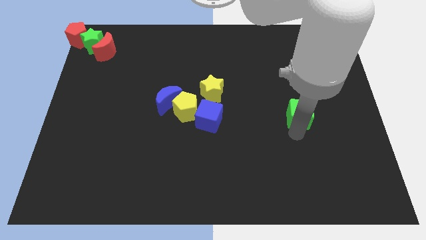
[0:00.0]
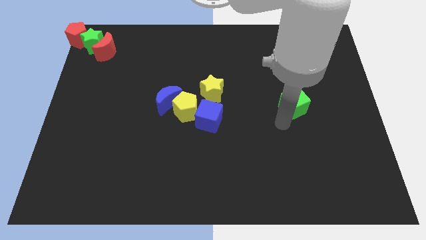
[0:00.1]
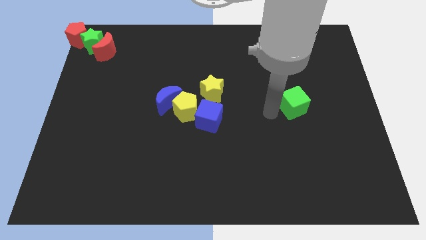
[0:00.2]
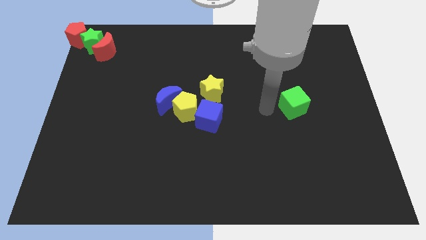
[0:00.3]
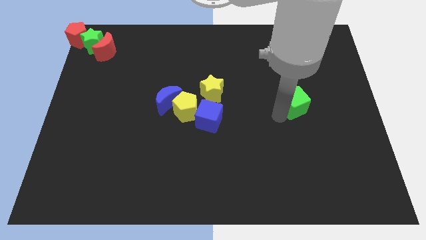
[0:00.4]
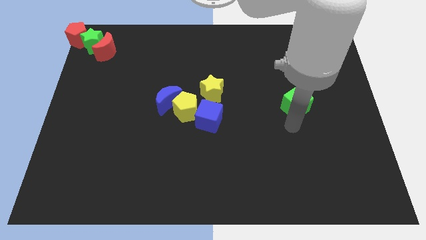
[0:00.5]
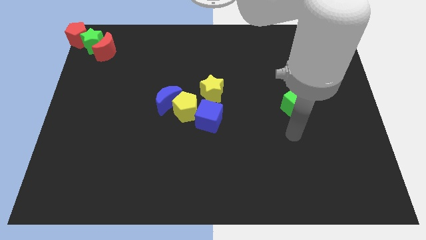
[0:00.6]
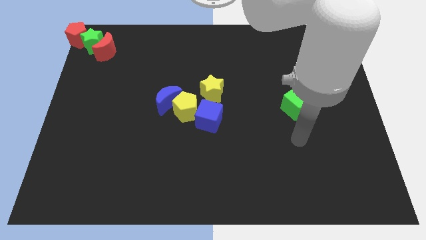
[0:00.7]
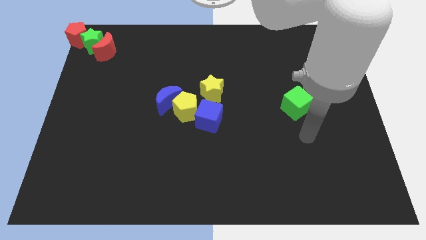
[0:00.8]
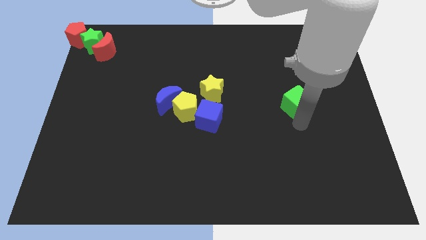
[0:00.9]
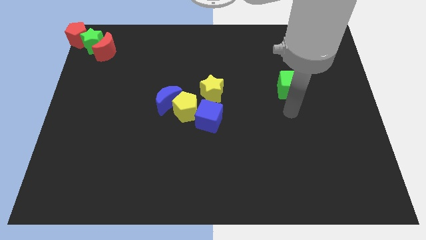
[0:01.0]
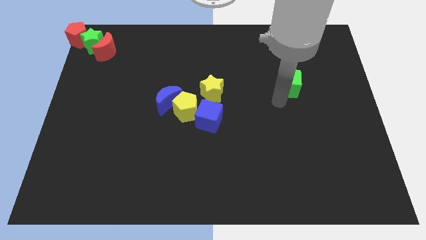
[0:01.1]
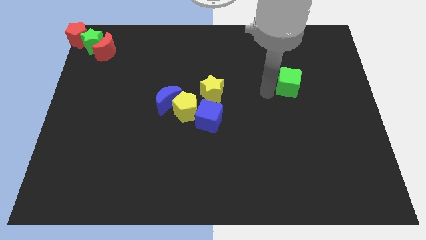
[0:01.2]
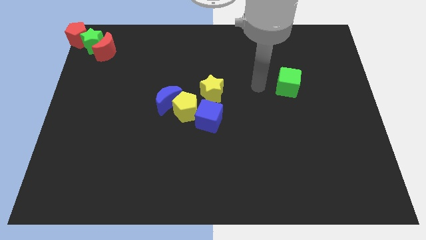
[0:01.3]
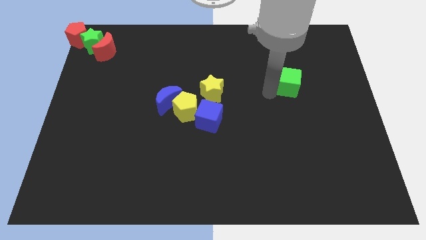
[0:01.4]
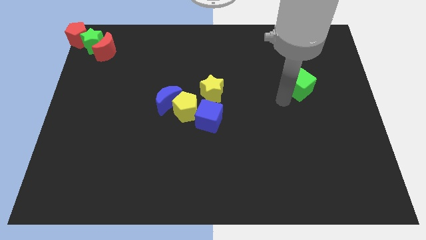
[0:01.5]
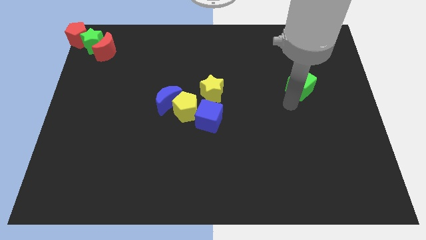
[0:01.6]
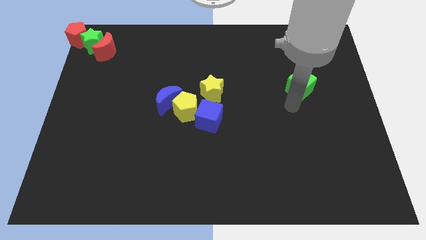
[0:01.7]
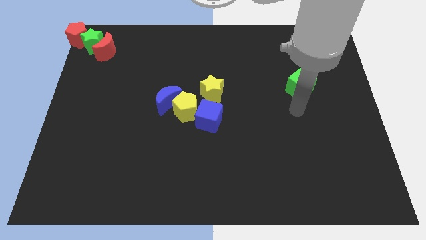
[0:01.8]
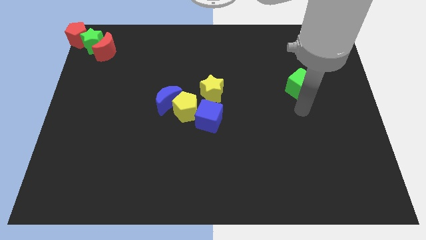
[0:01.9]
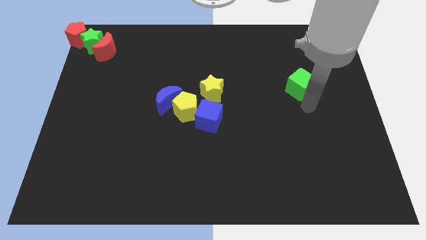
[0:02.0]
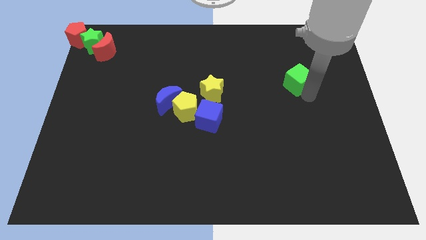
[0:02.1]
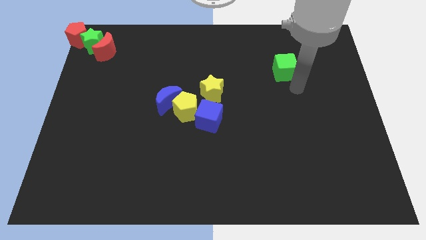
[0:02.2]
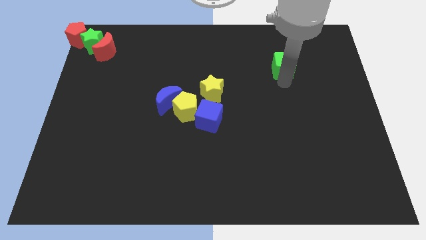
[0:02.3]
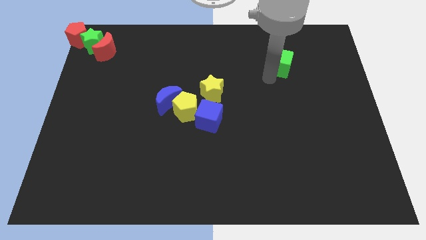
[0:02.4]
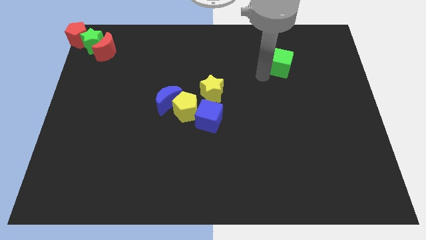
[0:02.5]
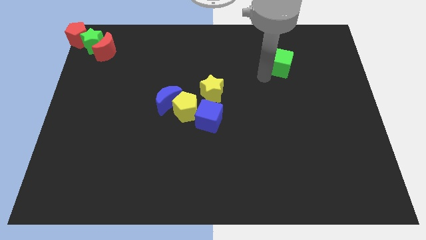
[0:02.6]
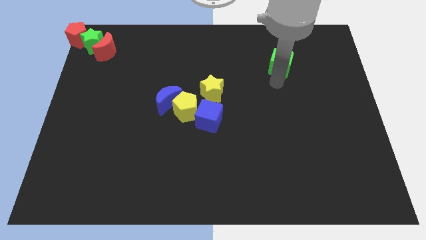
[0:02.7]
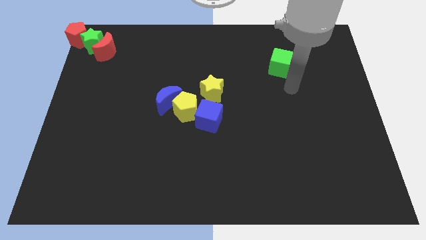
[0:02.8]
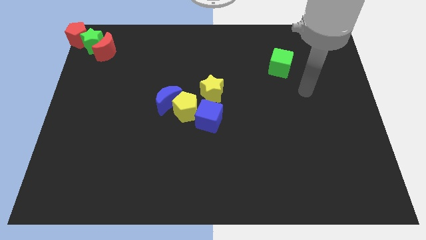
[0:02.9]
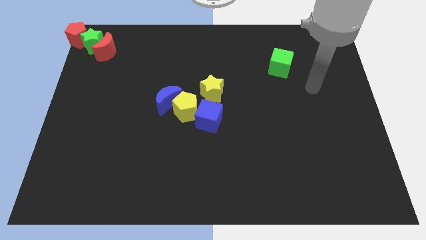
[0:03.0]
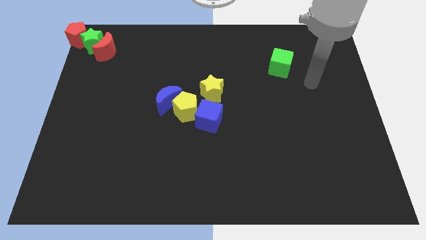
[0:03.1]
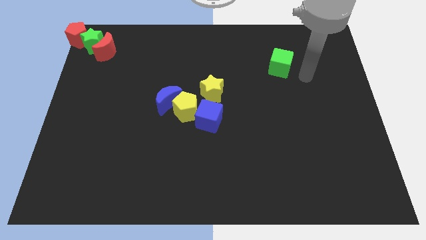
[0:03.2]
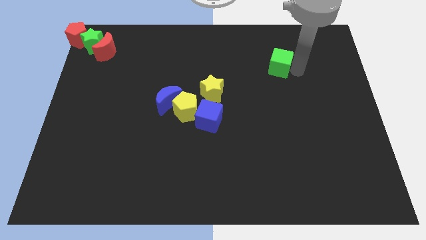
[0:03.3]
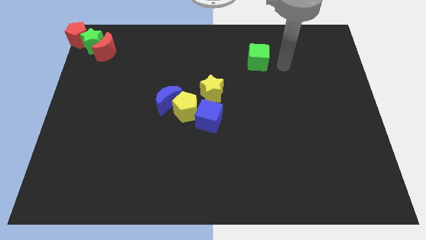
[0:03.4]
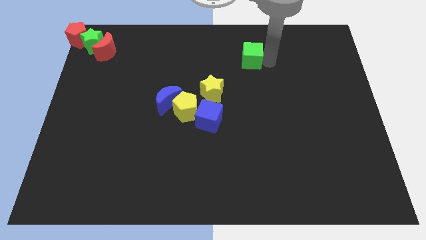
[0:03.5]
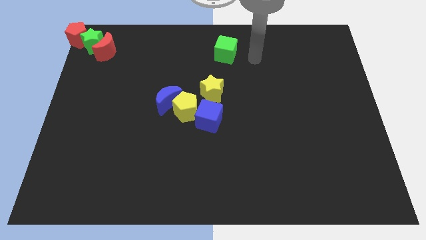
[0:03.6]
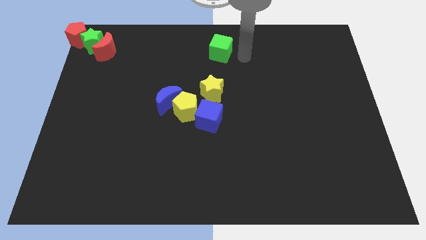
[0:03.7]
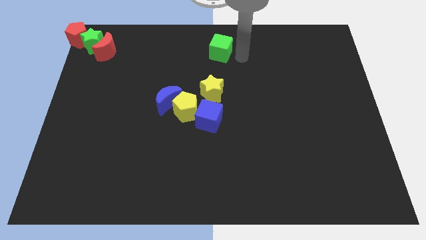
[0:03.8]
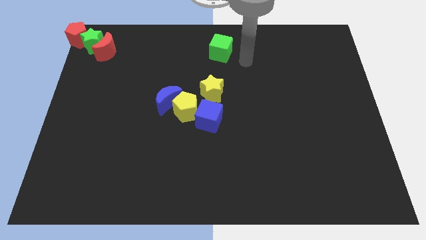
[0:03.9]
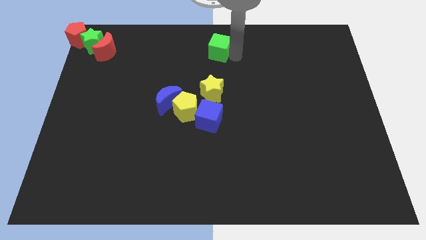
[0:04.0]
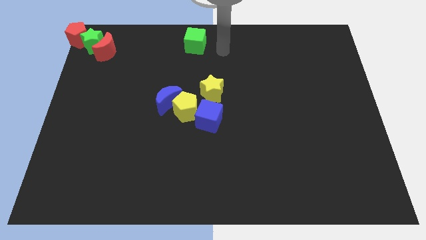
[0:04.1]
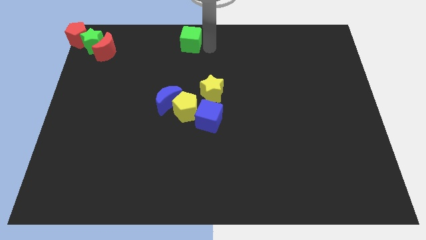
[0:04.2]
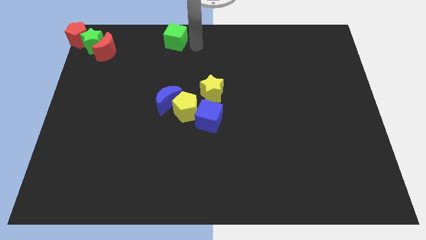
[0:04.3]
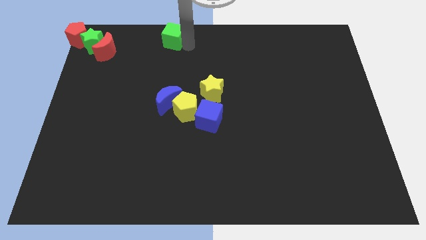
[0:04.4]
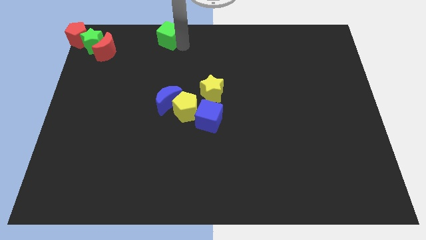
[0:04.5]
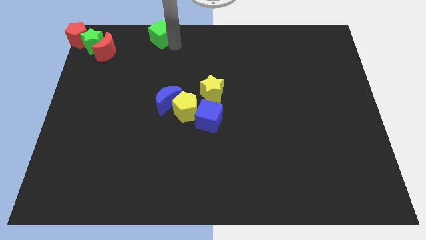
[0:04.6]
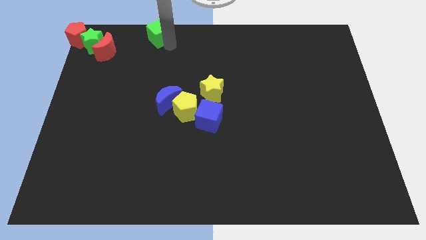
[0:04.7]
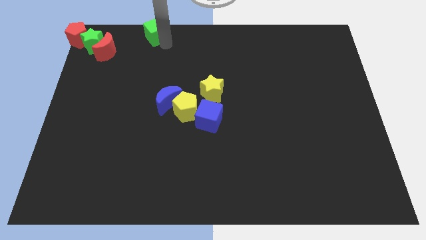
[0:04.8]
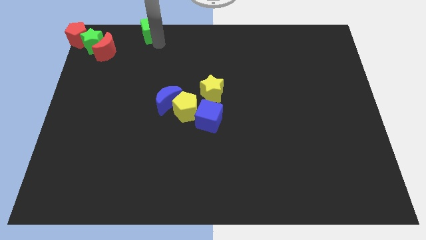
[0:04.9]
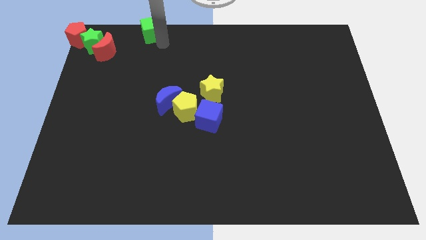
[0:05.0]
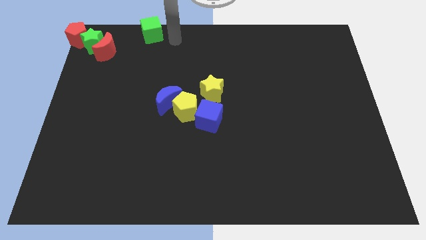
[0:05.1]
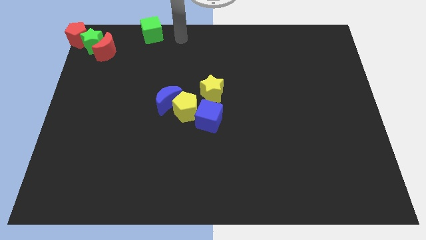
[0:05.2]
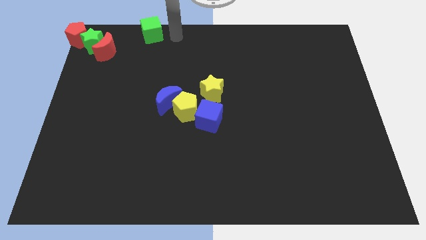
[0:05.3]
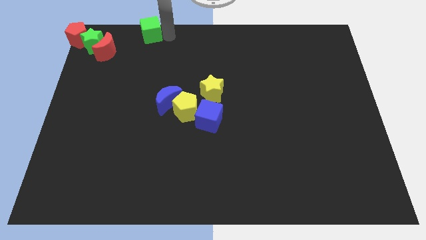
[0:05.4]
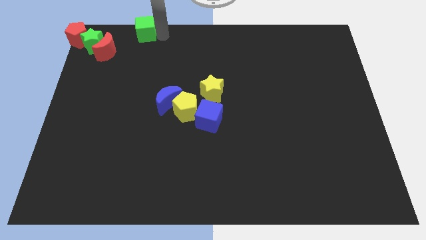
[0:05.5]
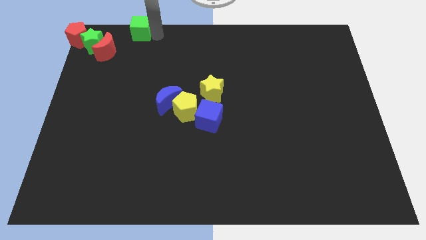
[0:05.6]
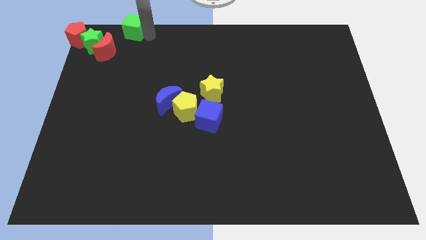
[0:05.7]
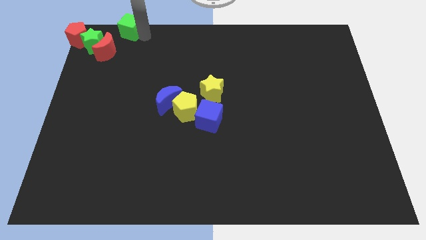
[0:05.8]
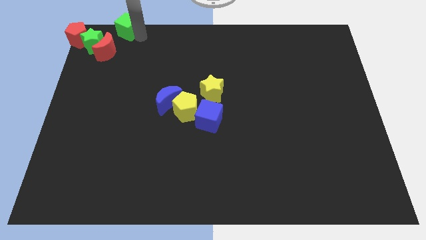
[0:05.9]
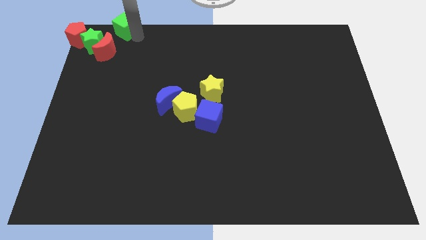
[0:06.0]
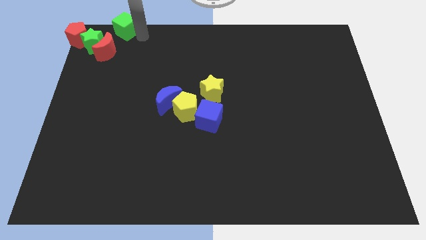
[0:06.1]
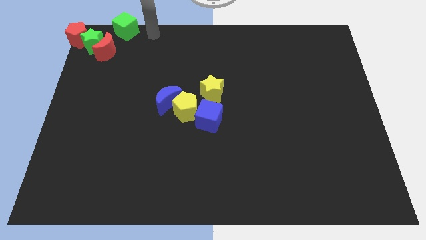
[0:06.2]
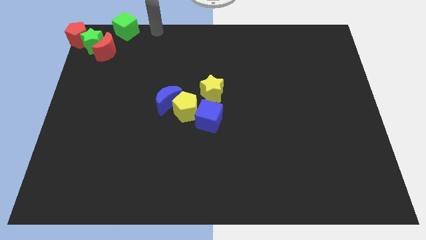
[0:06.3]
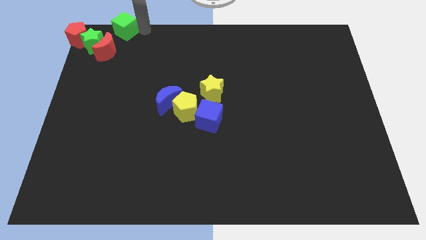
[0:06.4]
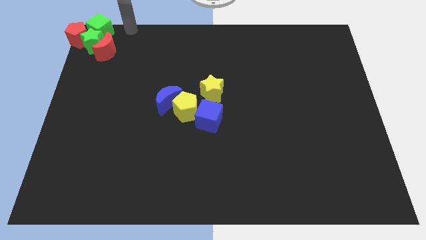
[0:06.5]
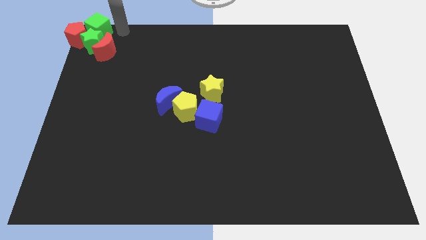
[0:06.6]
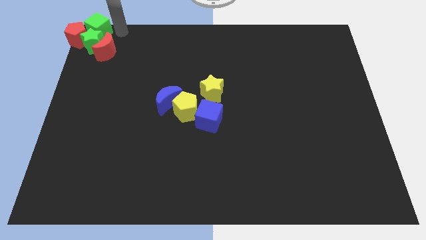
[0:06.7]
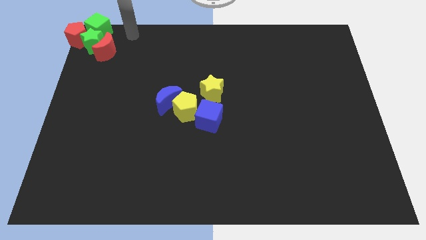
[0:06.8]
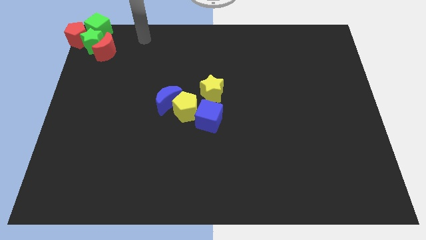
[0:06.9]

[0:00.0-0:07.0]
move the green cube to top of the green star

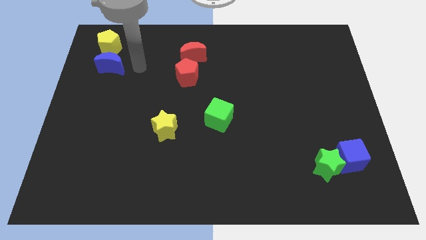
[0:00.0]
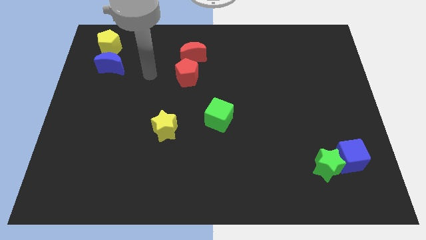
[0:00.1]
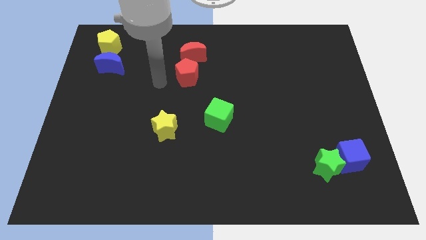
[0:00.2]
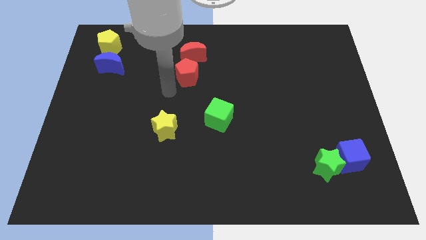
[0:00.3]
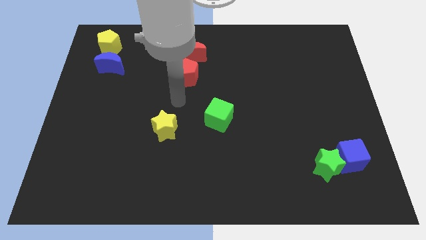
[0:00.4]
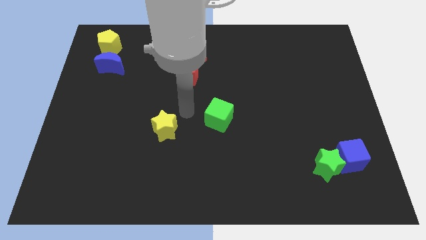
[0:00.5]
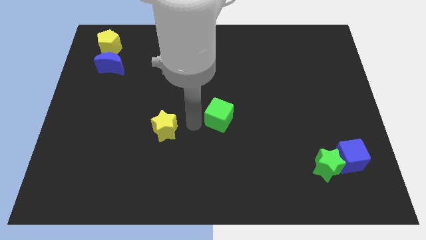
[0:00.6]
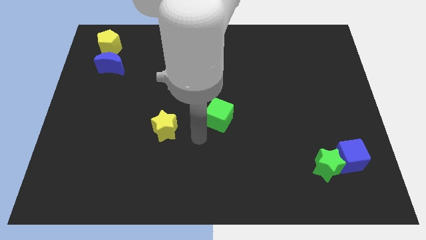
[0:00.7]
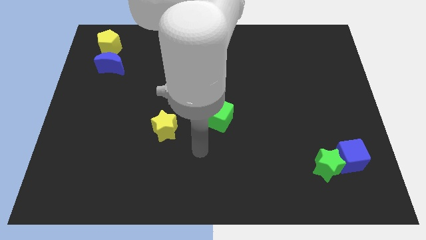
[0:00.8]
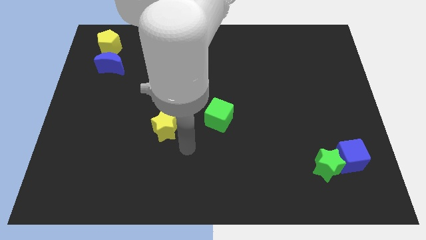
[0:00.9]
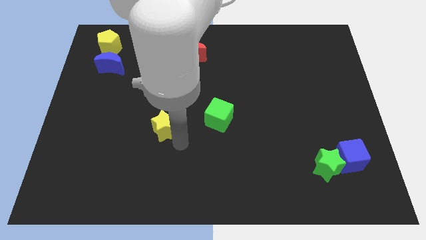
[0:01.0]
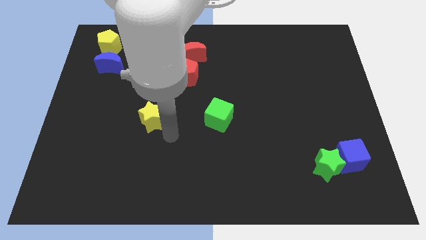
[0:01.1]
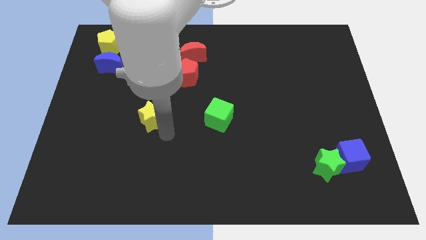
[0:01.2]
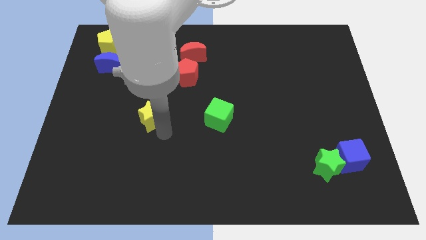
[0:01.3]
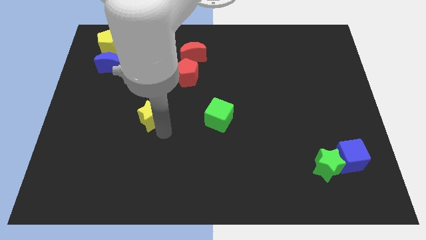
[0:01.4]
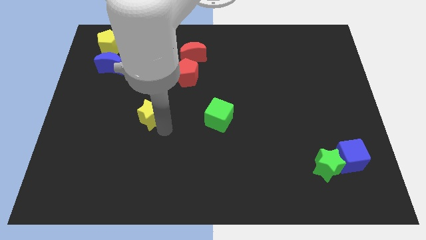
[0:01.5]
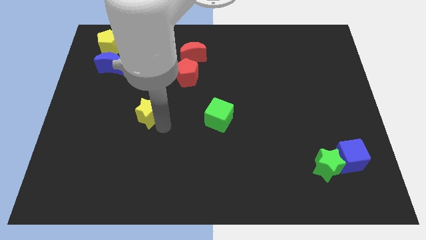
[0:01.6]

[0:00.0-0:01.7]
drag the yellow star towards the blue moon
